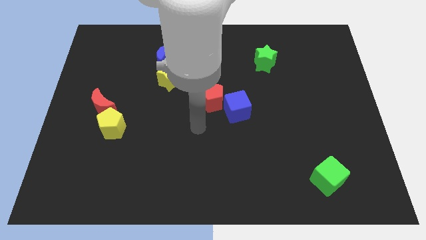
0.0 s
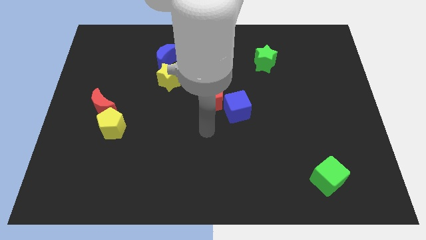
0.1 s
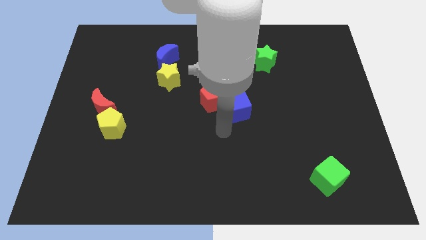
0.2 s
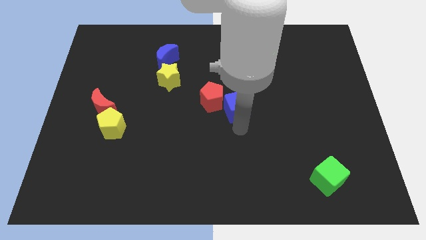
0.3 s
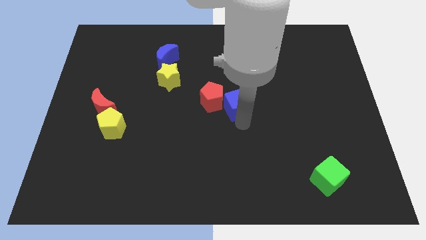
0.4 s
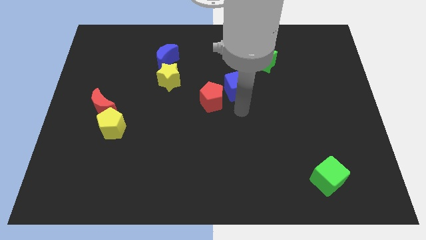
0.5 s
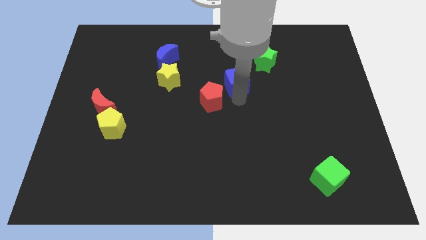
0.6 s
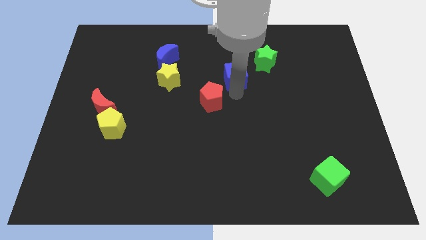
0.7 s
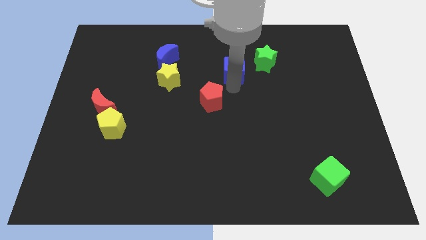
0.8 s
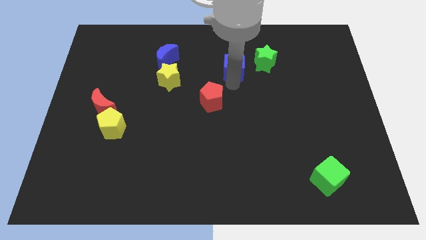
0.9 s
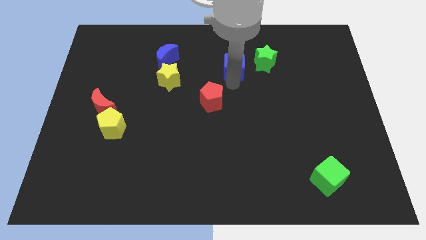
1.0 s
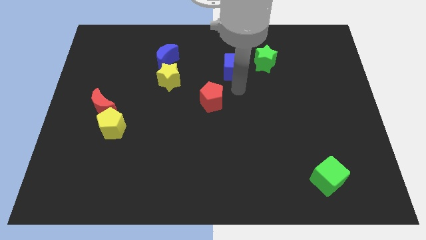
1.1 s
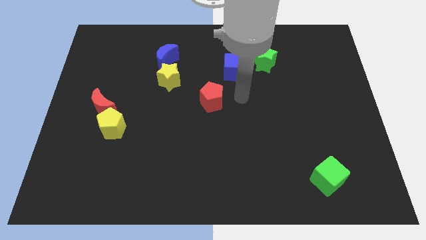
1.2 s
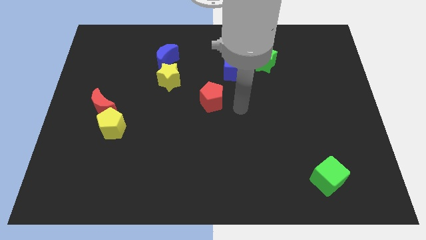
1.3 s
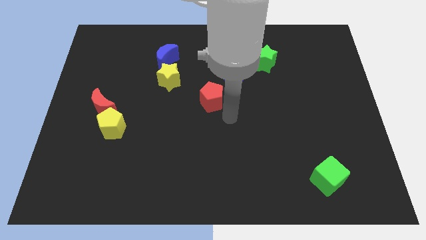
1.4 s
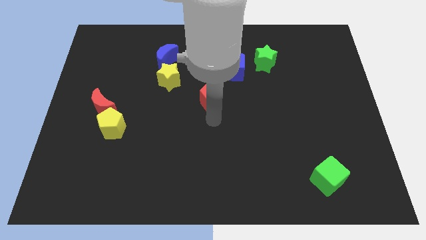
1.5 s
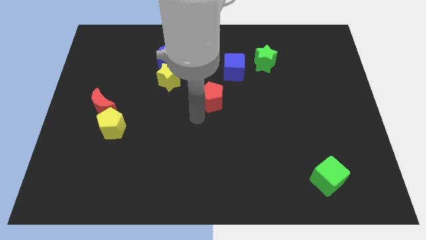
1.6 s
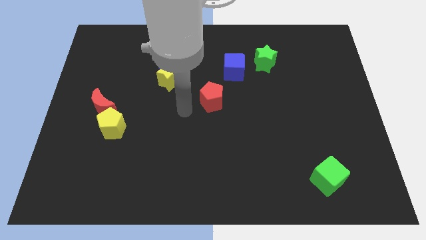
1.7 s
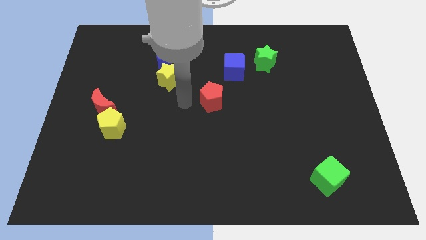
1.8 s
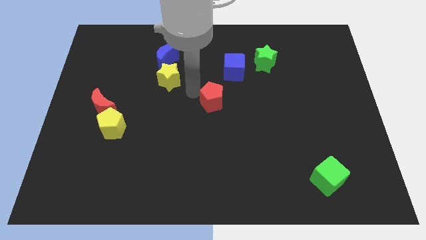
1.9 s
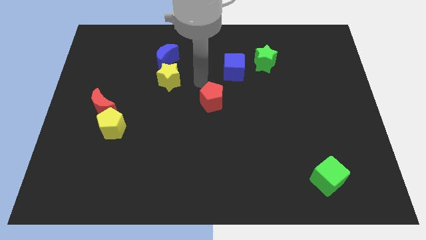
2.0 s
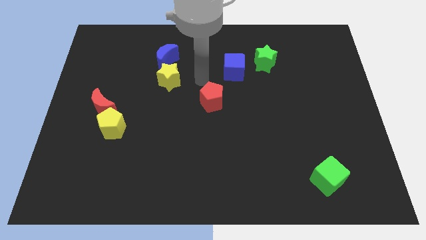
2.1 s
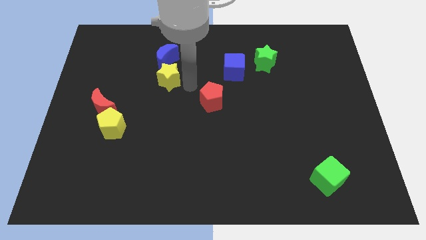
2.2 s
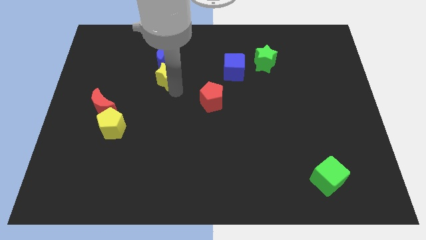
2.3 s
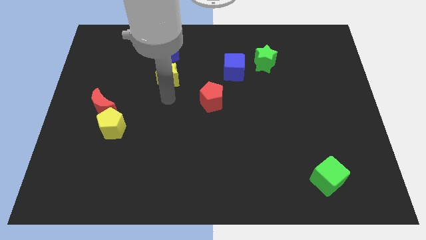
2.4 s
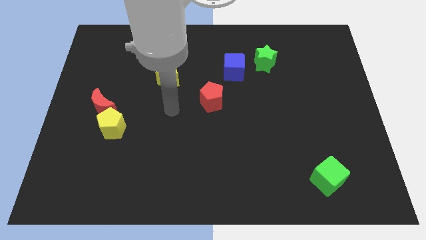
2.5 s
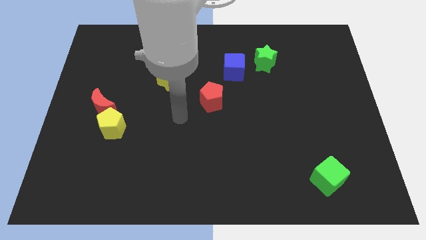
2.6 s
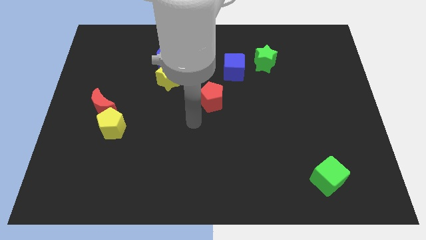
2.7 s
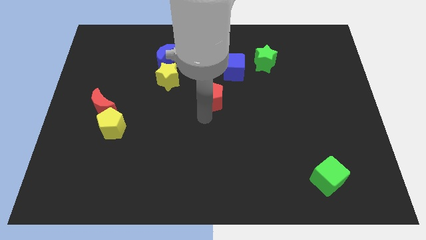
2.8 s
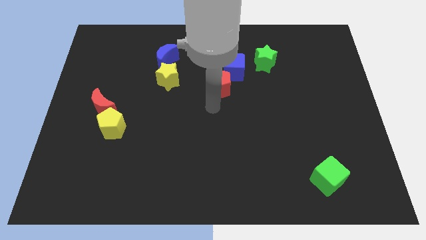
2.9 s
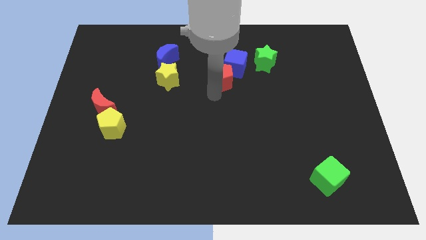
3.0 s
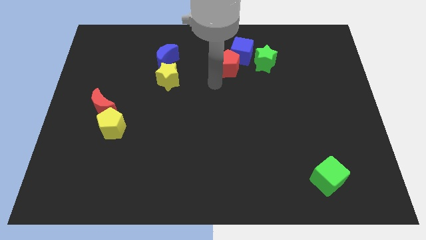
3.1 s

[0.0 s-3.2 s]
move the red pentagon along with blue cube to the left of the green star

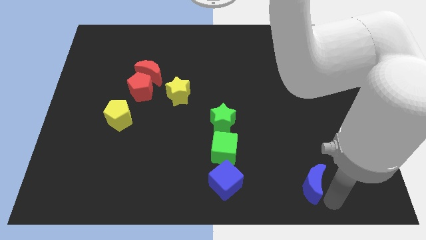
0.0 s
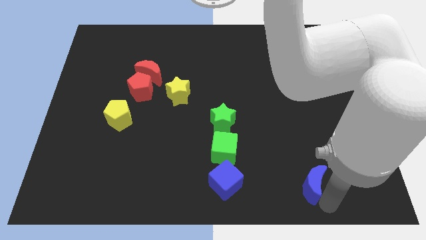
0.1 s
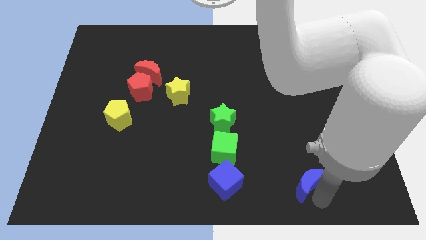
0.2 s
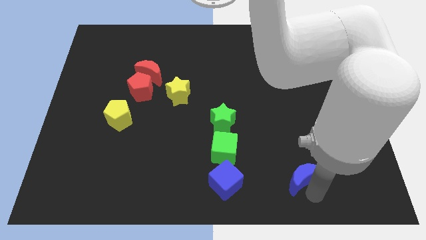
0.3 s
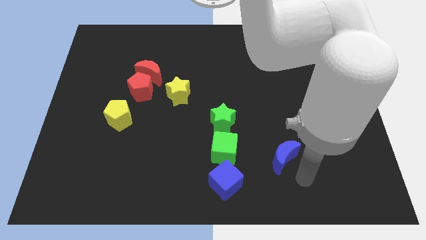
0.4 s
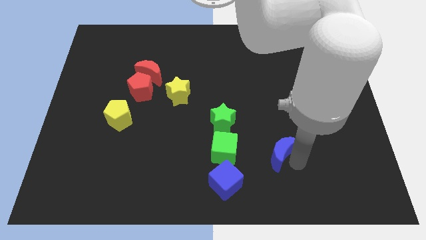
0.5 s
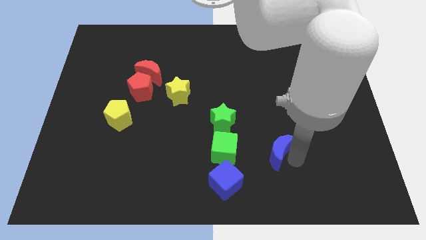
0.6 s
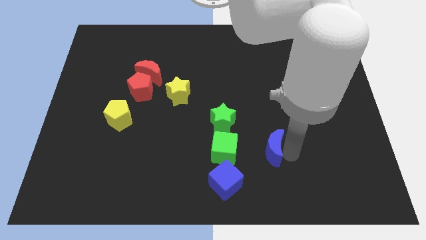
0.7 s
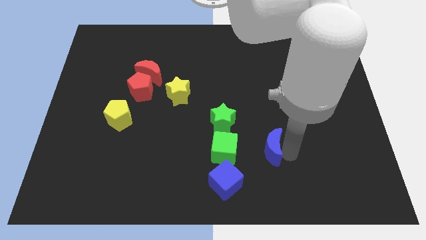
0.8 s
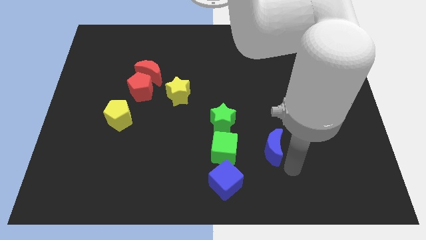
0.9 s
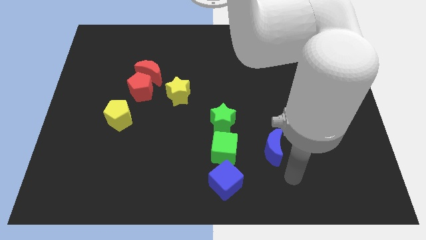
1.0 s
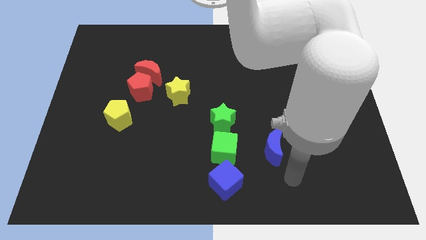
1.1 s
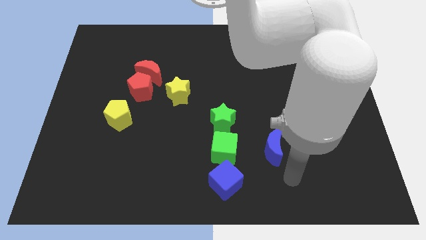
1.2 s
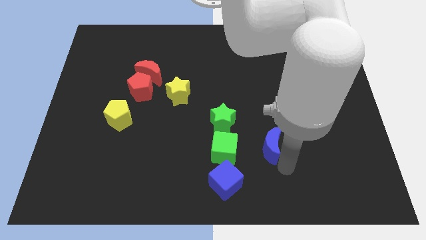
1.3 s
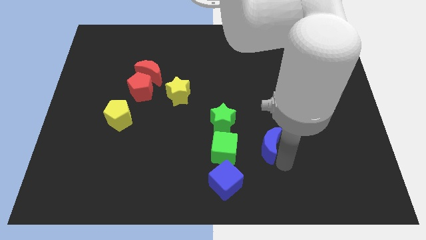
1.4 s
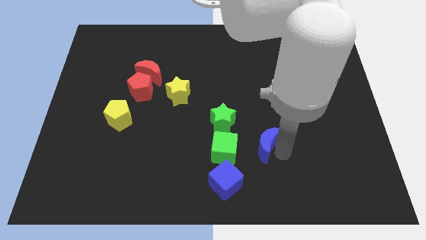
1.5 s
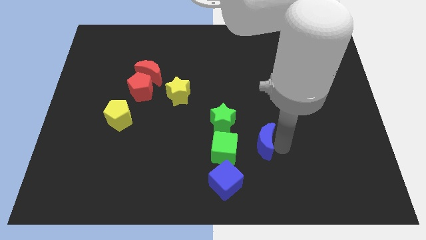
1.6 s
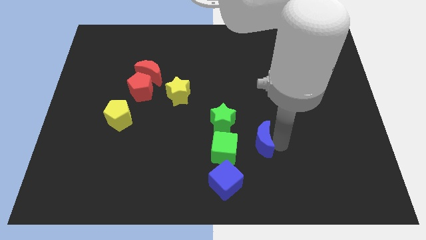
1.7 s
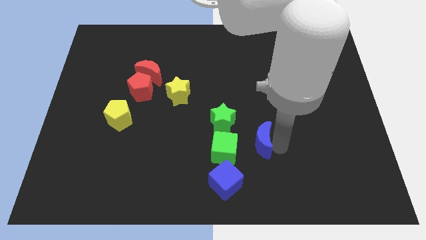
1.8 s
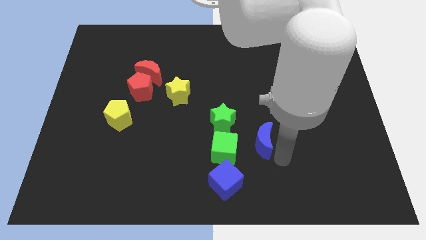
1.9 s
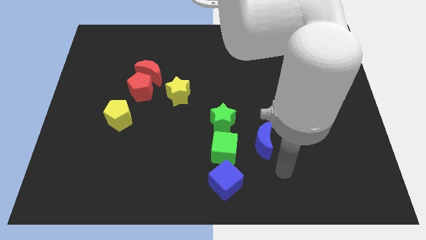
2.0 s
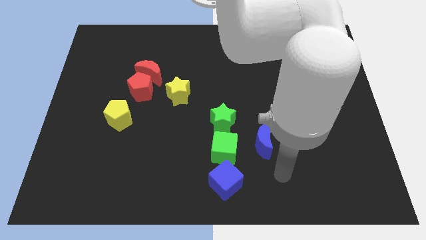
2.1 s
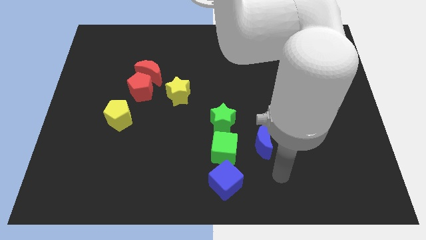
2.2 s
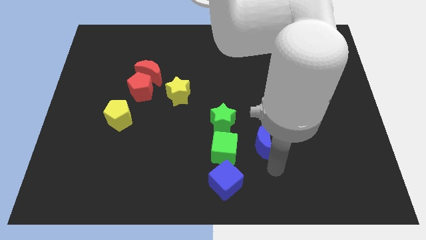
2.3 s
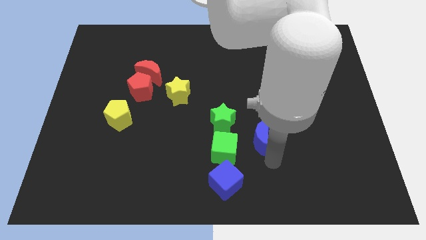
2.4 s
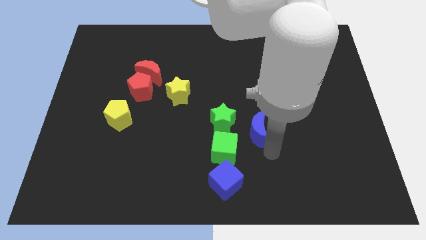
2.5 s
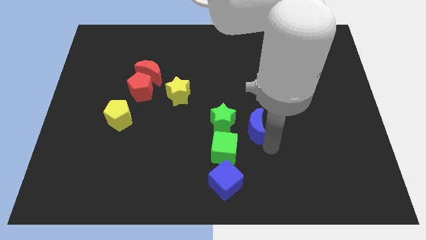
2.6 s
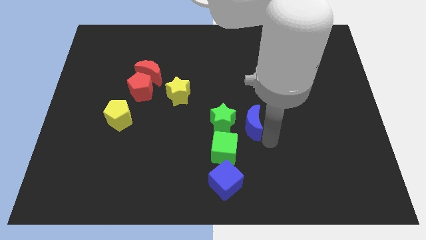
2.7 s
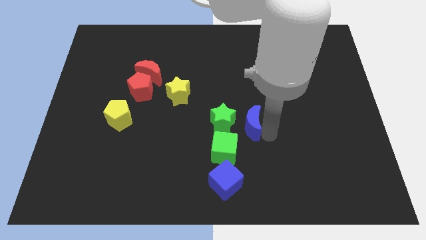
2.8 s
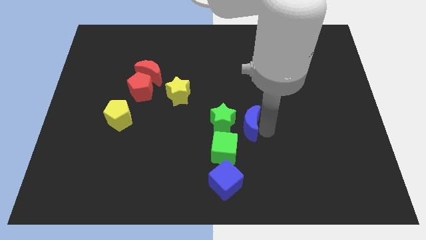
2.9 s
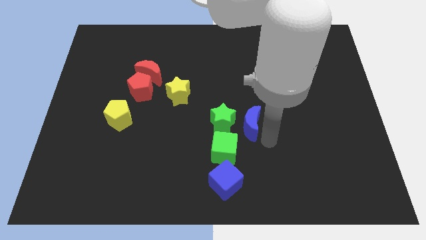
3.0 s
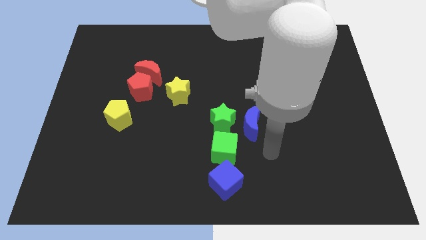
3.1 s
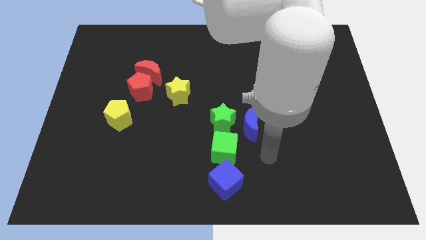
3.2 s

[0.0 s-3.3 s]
push the blue crescent right to the green star

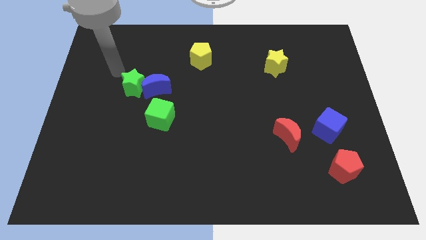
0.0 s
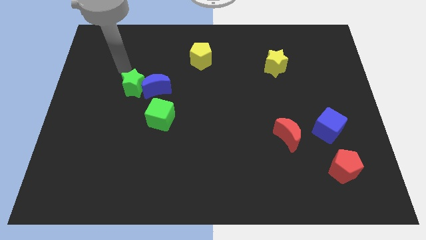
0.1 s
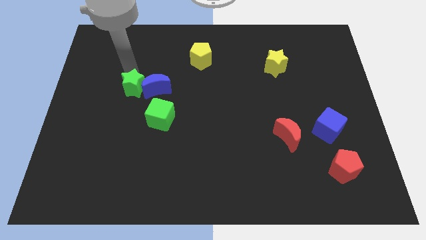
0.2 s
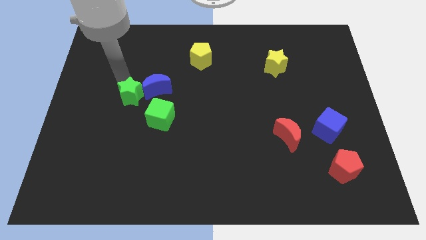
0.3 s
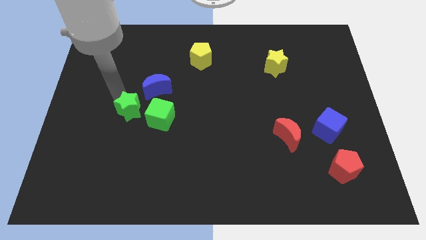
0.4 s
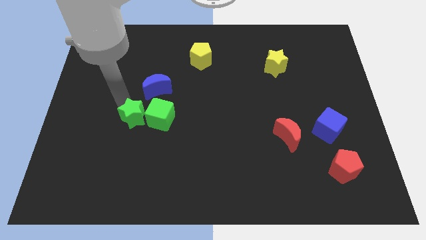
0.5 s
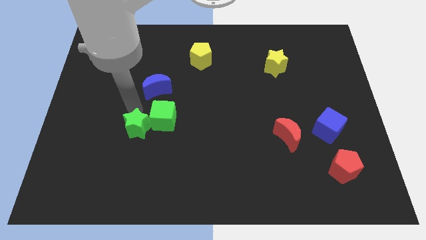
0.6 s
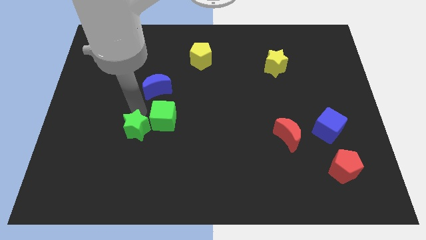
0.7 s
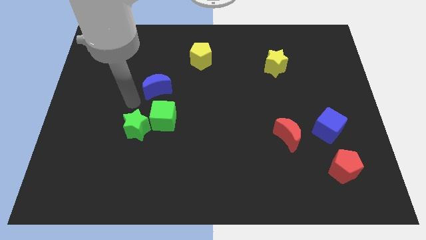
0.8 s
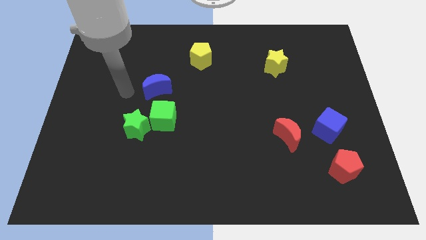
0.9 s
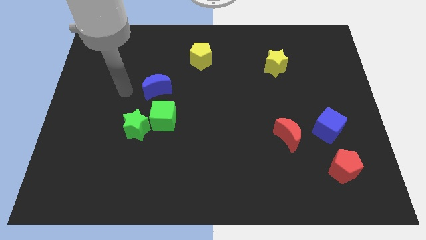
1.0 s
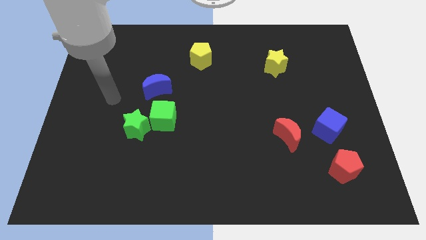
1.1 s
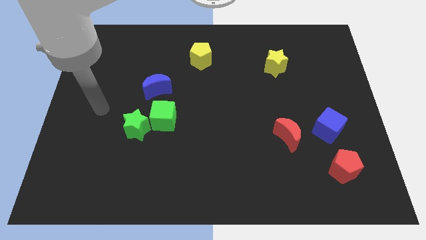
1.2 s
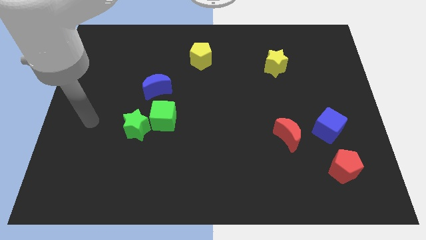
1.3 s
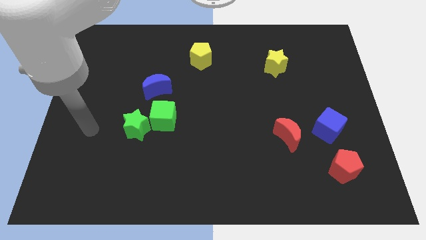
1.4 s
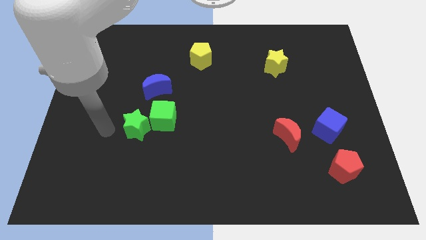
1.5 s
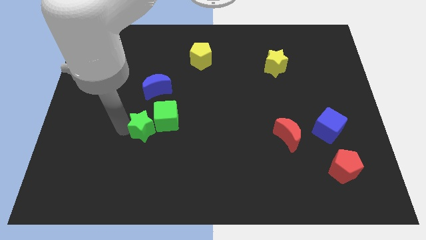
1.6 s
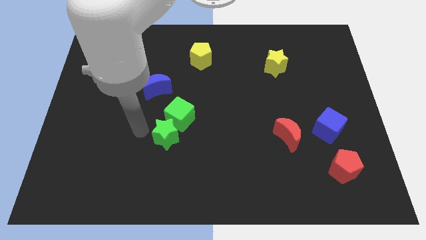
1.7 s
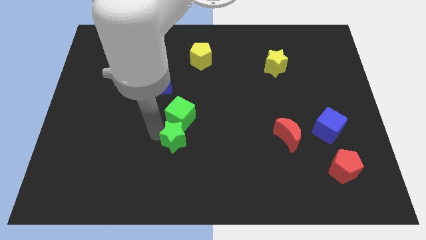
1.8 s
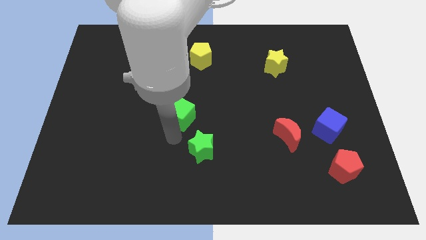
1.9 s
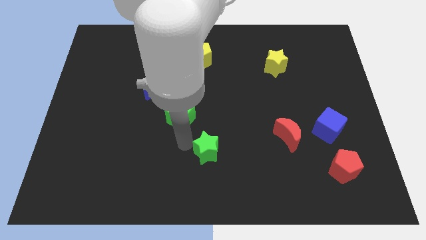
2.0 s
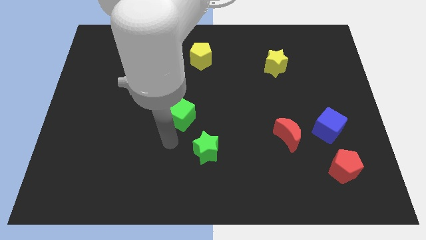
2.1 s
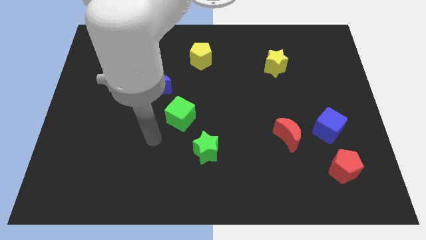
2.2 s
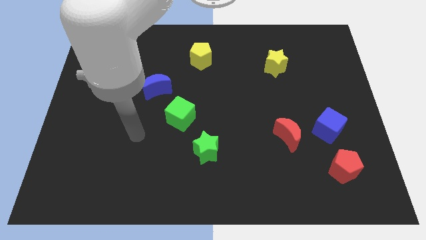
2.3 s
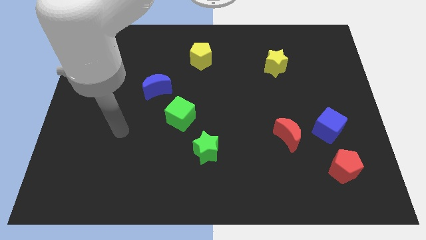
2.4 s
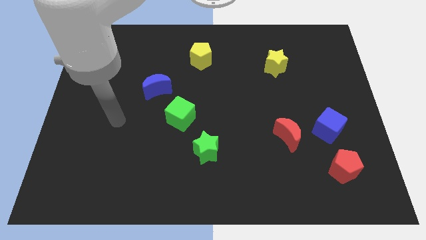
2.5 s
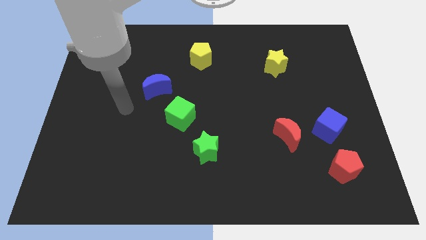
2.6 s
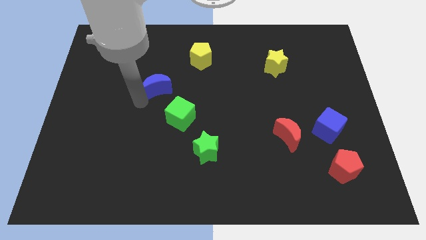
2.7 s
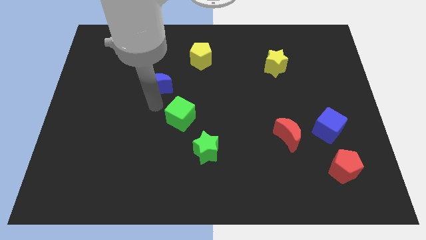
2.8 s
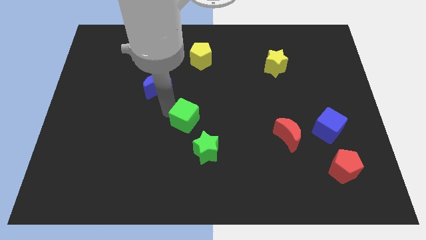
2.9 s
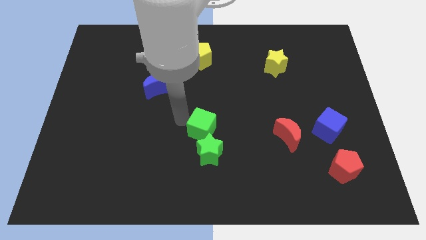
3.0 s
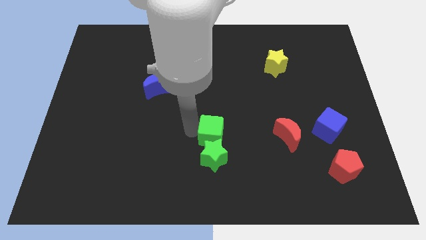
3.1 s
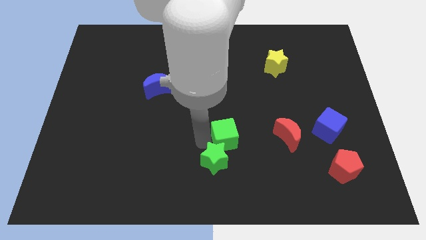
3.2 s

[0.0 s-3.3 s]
push the green blocks to the center of the board
